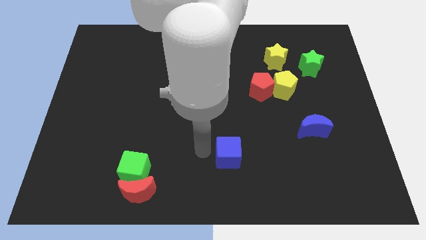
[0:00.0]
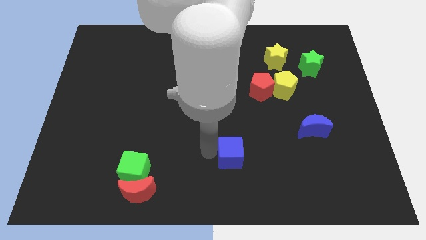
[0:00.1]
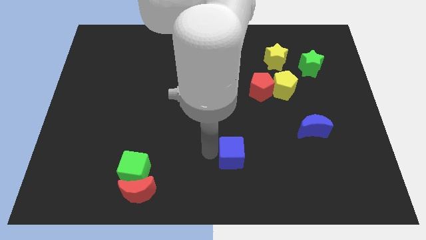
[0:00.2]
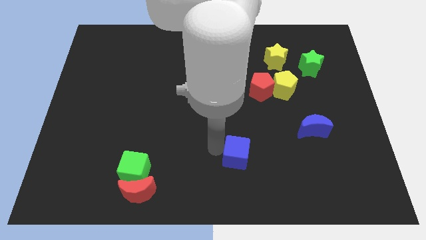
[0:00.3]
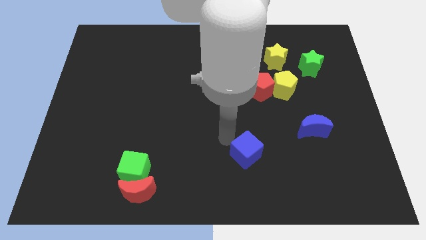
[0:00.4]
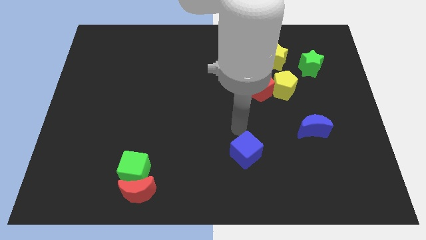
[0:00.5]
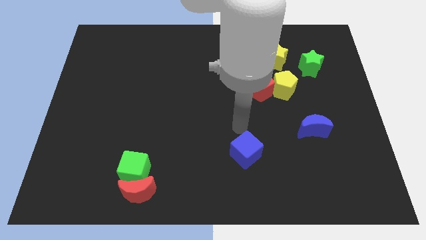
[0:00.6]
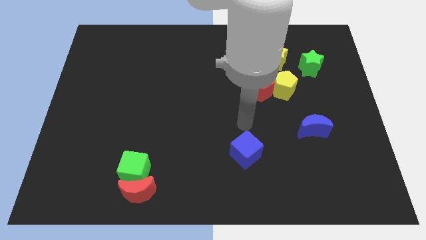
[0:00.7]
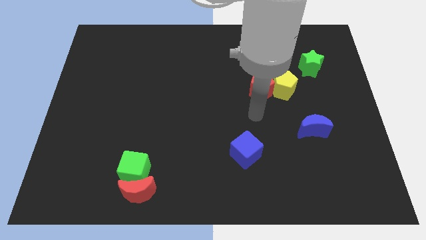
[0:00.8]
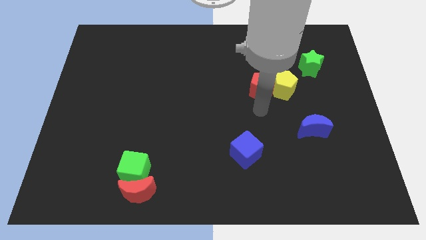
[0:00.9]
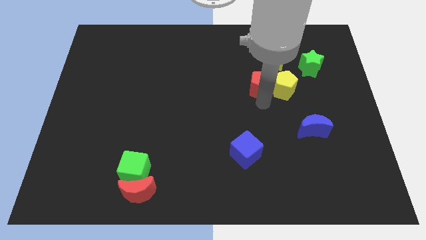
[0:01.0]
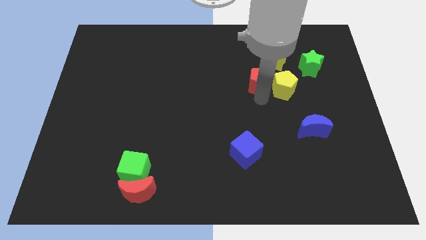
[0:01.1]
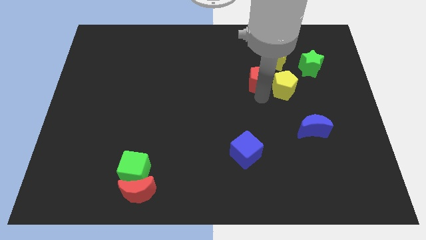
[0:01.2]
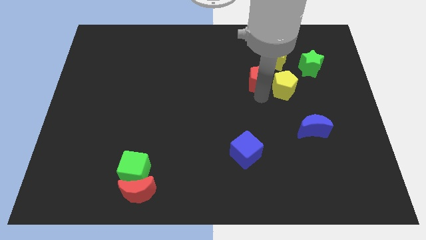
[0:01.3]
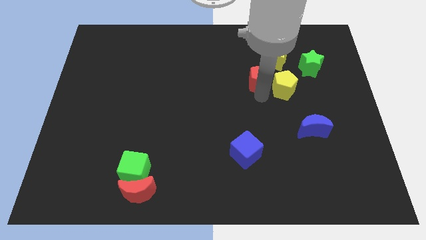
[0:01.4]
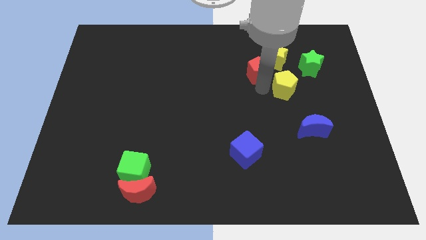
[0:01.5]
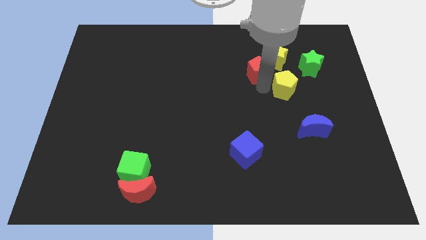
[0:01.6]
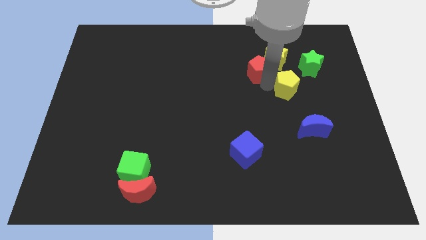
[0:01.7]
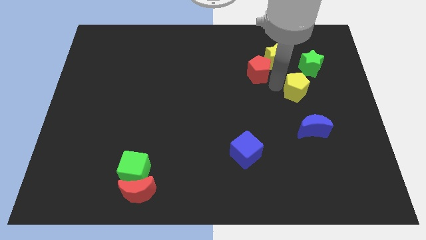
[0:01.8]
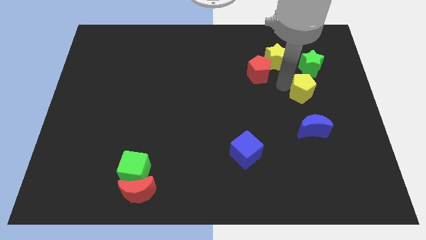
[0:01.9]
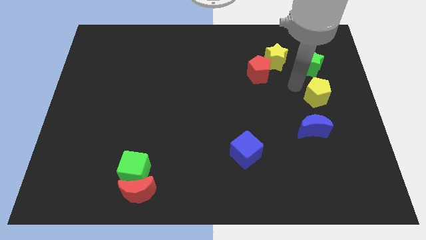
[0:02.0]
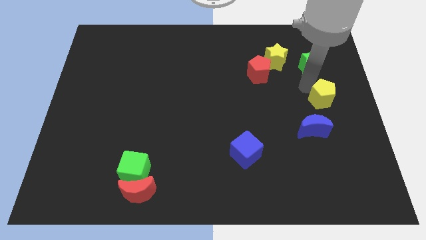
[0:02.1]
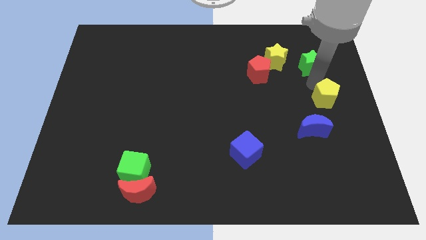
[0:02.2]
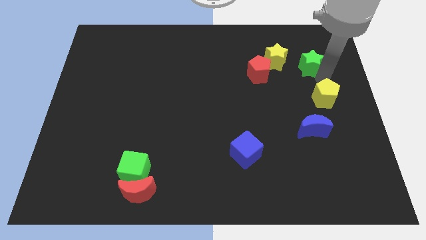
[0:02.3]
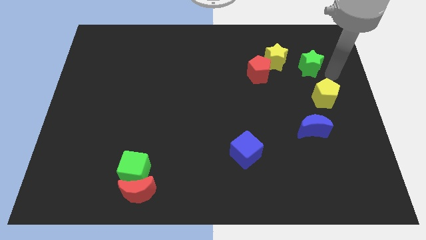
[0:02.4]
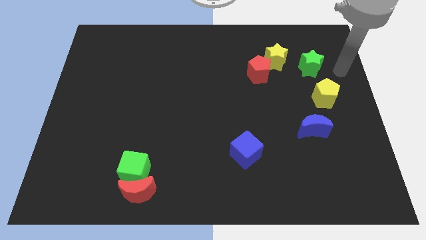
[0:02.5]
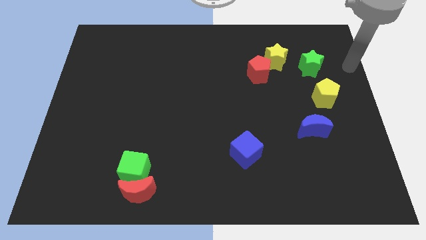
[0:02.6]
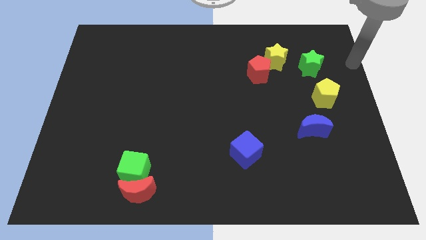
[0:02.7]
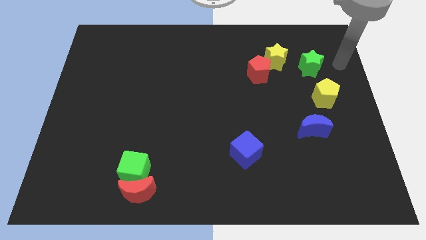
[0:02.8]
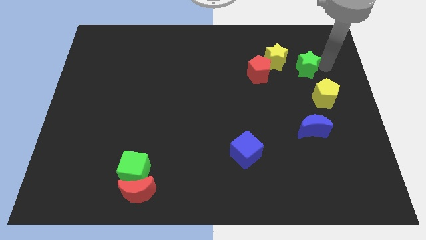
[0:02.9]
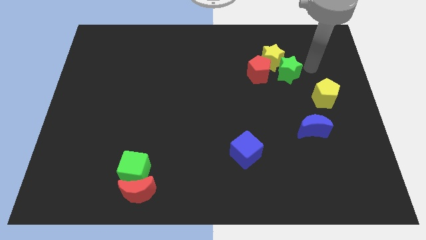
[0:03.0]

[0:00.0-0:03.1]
move your arm away from blue cube

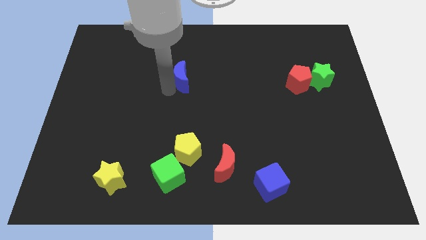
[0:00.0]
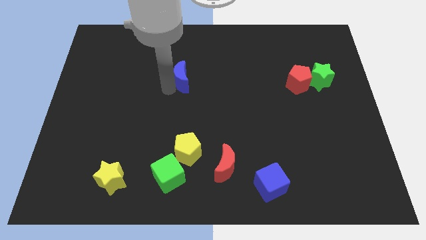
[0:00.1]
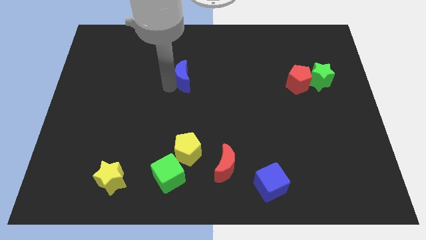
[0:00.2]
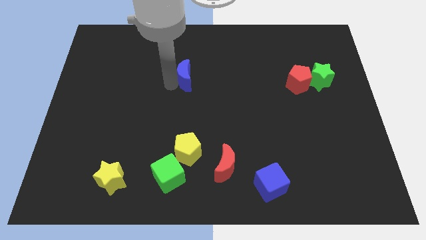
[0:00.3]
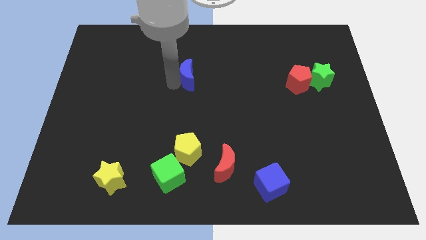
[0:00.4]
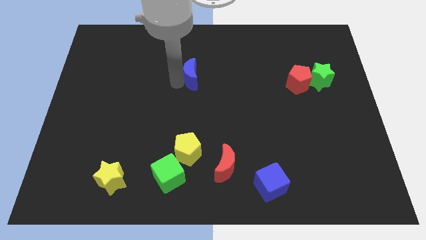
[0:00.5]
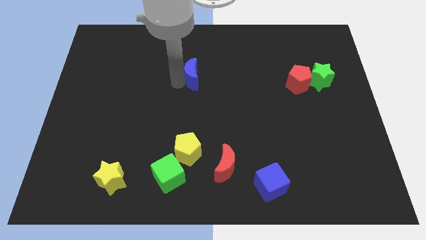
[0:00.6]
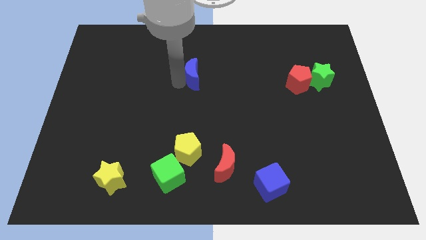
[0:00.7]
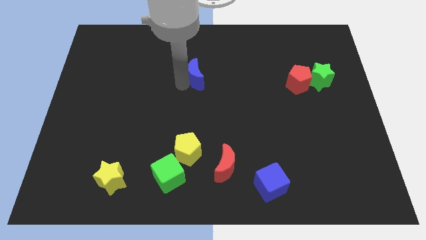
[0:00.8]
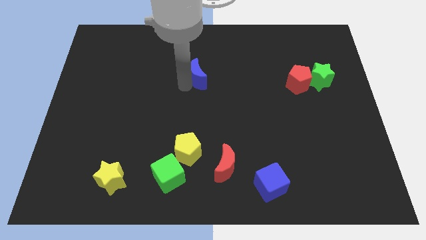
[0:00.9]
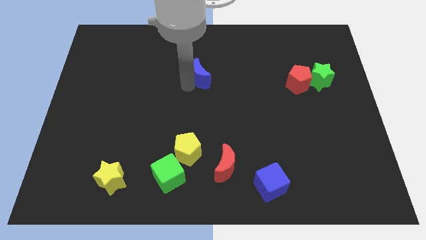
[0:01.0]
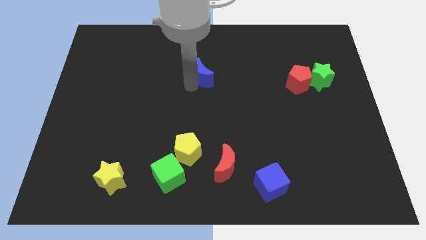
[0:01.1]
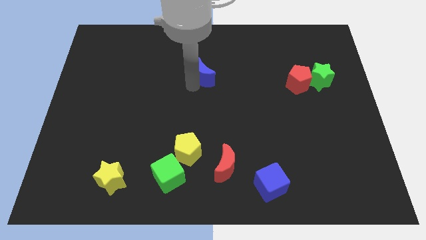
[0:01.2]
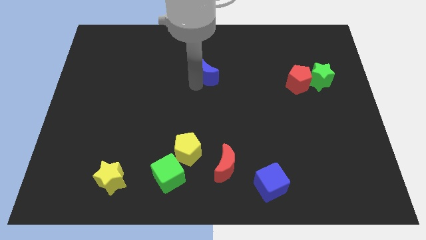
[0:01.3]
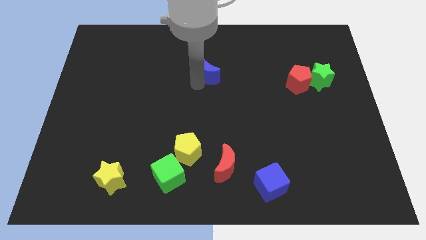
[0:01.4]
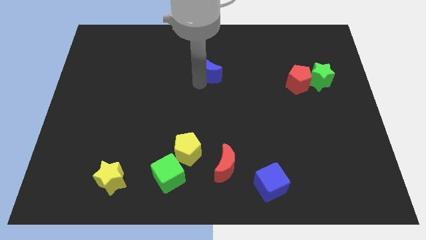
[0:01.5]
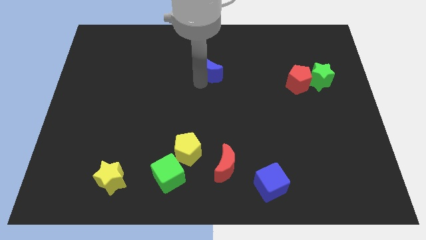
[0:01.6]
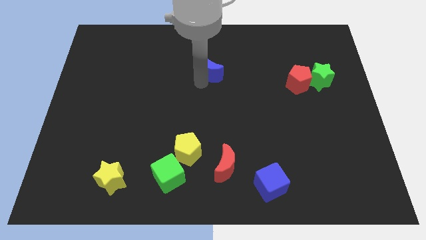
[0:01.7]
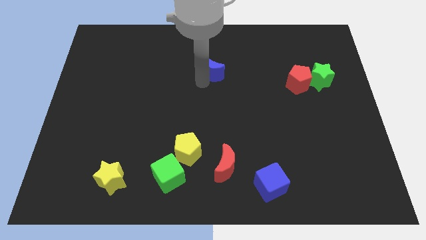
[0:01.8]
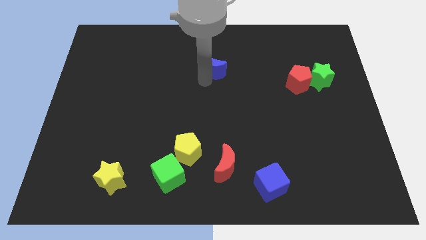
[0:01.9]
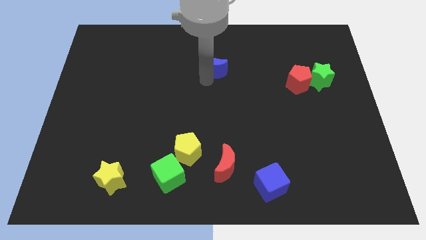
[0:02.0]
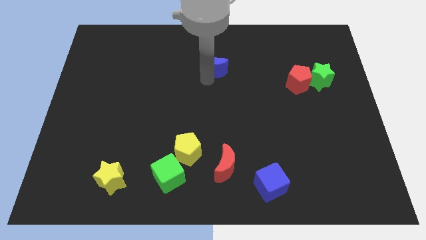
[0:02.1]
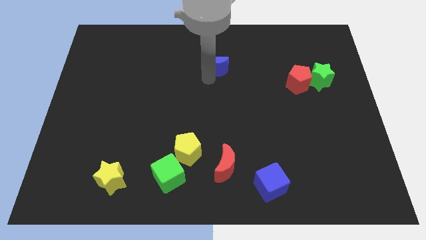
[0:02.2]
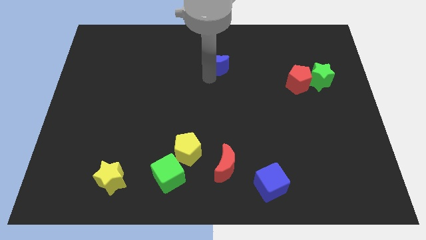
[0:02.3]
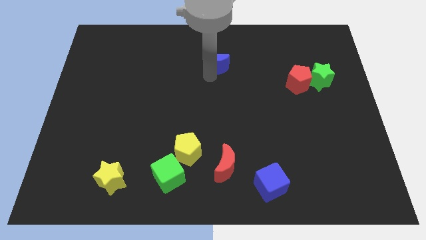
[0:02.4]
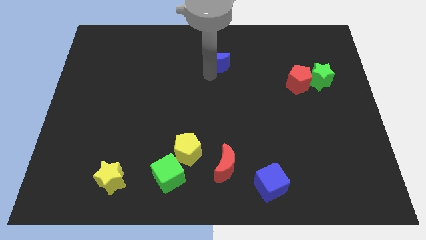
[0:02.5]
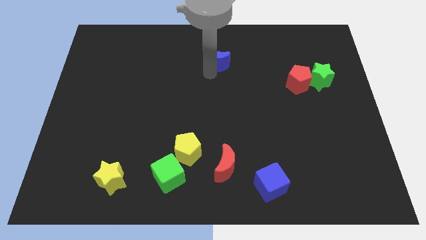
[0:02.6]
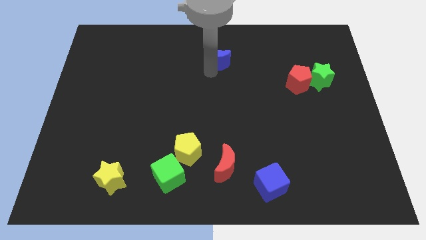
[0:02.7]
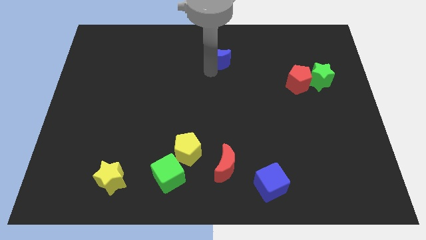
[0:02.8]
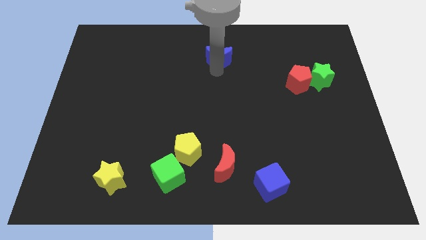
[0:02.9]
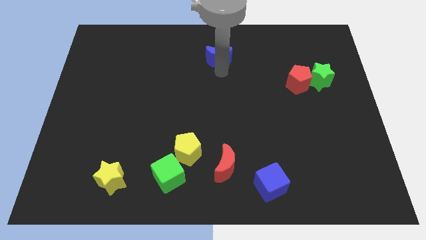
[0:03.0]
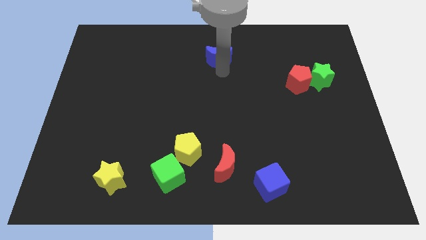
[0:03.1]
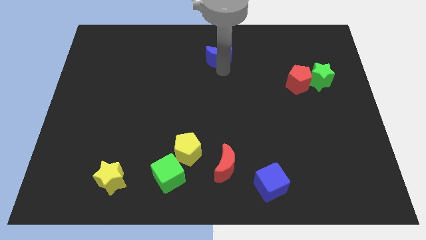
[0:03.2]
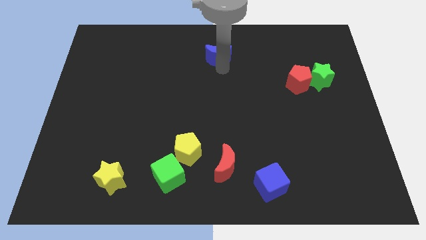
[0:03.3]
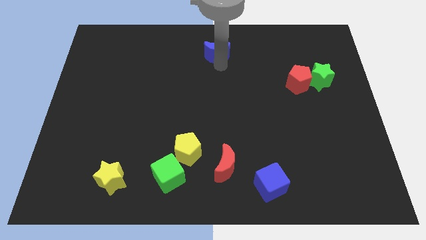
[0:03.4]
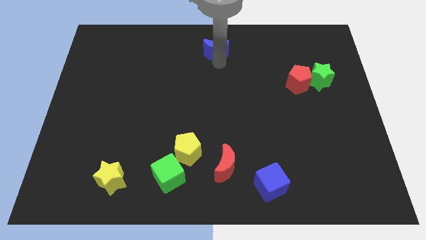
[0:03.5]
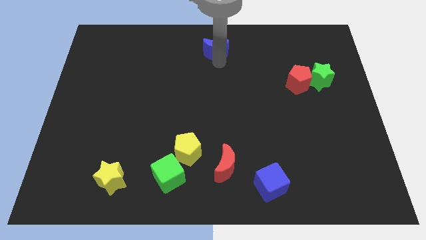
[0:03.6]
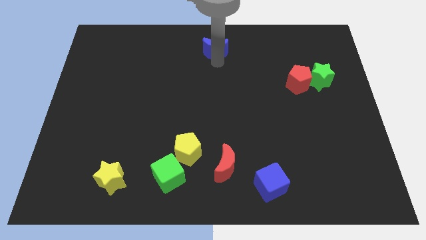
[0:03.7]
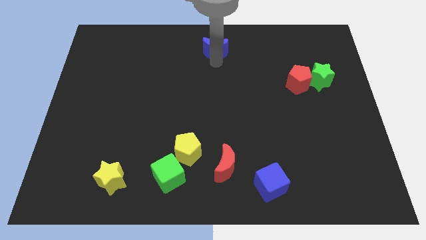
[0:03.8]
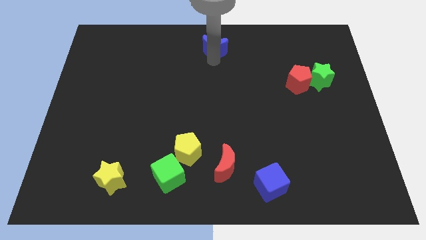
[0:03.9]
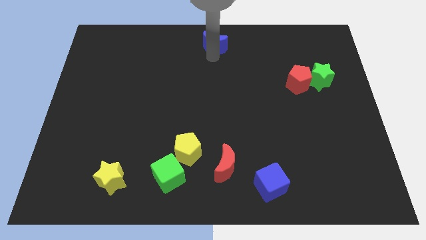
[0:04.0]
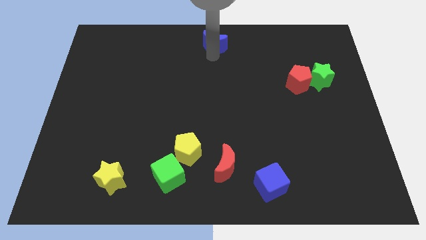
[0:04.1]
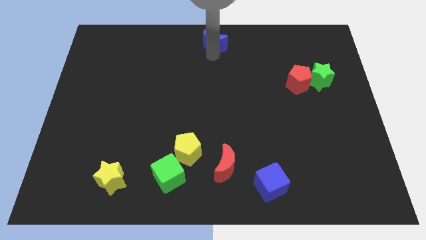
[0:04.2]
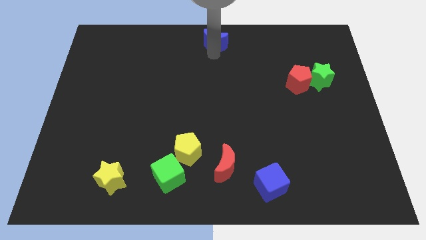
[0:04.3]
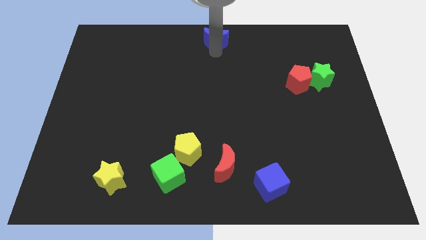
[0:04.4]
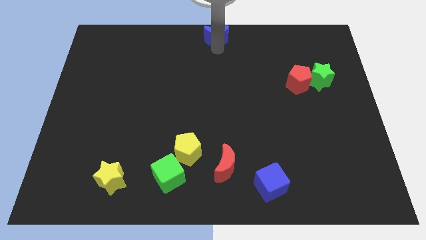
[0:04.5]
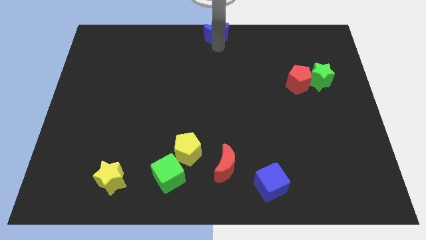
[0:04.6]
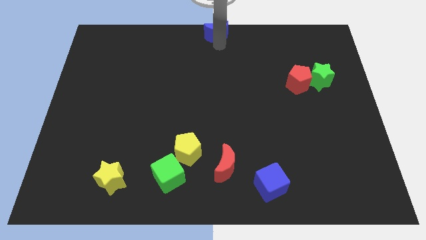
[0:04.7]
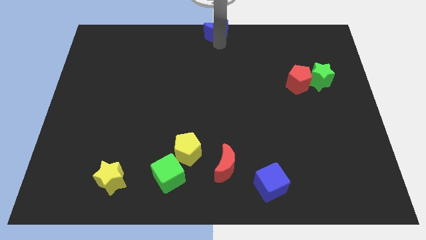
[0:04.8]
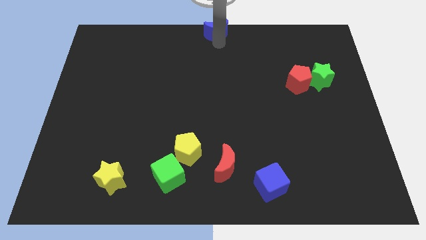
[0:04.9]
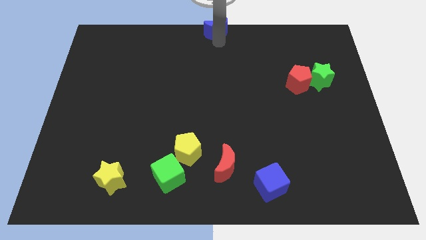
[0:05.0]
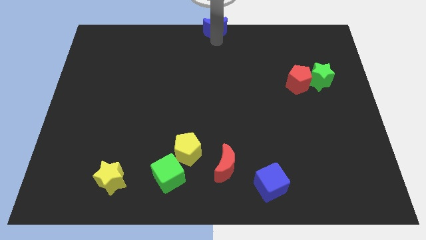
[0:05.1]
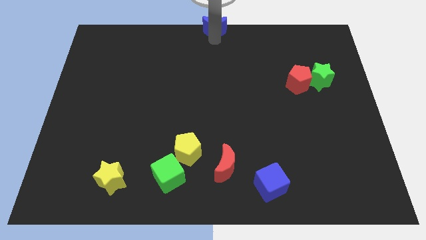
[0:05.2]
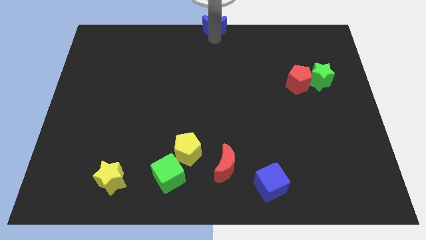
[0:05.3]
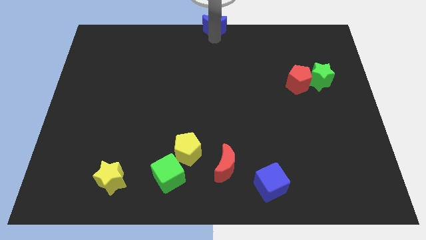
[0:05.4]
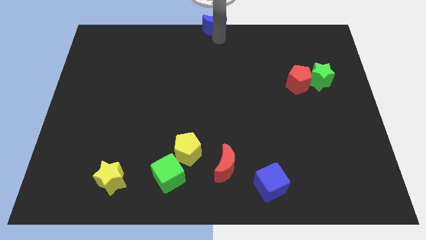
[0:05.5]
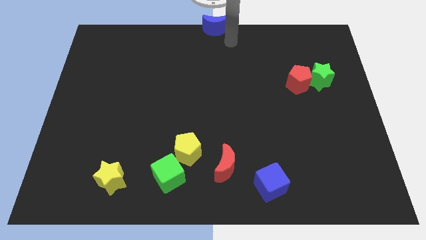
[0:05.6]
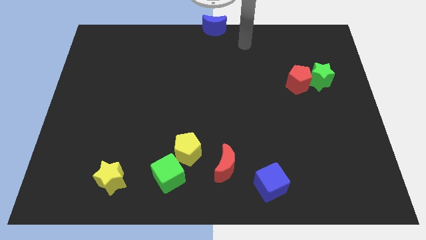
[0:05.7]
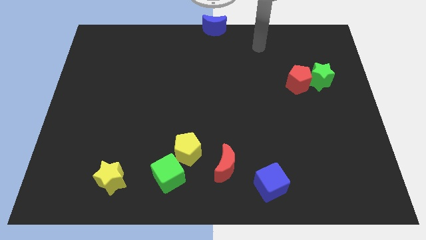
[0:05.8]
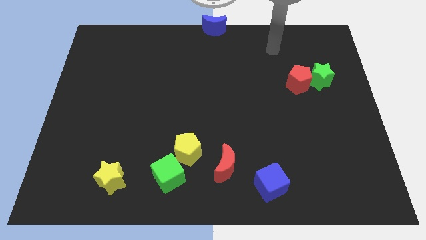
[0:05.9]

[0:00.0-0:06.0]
place the blue moon at the top center of the board

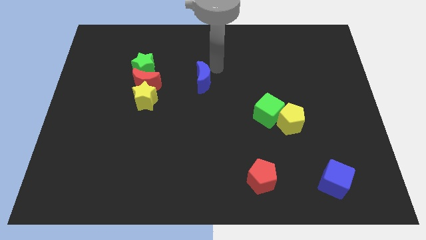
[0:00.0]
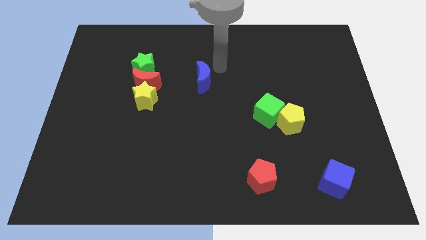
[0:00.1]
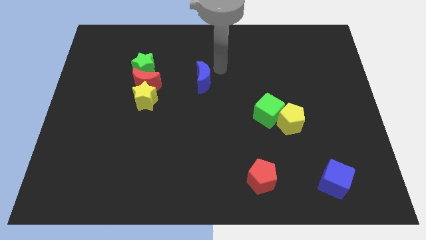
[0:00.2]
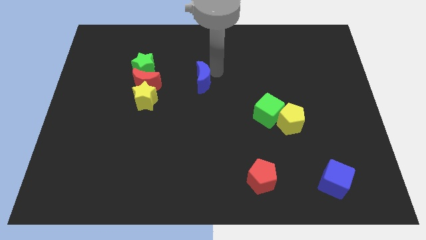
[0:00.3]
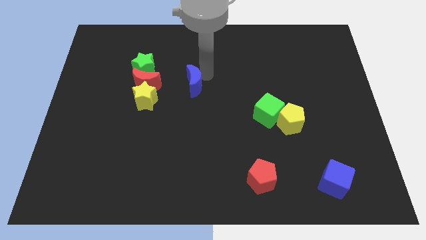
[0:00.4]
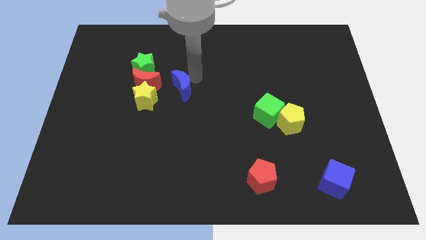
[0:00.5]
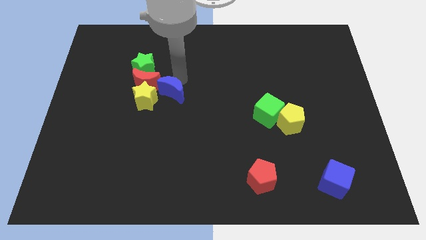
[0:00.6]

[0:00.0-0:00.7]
move the blue moon close to the yellow star
